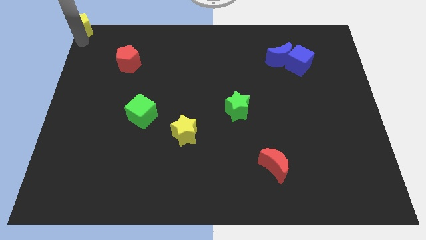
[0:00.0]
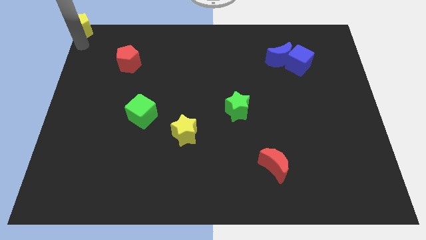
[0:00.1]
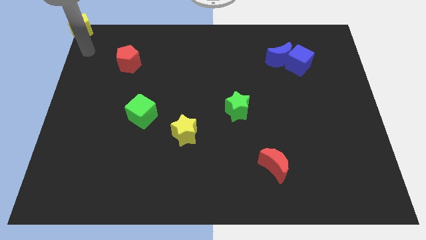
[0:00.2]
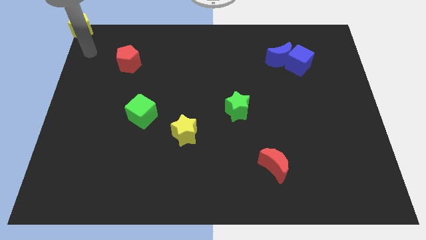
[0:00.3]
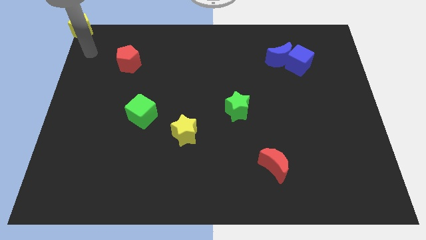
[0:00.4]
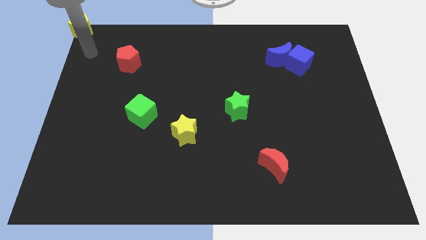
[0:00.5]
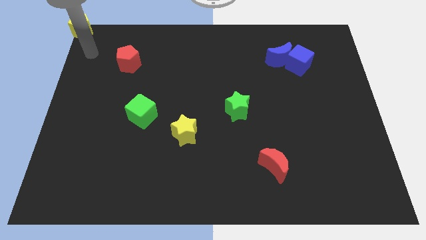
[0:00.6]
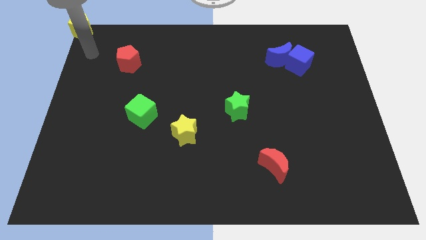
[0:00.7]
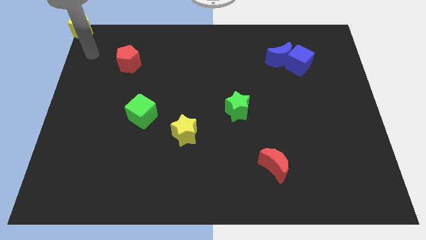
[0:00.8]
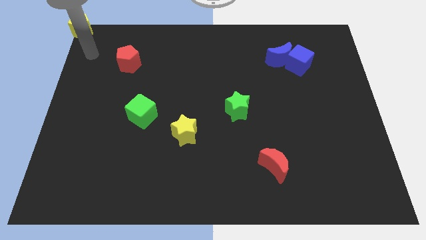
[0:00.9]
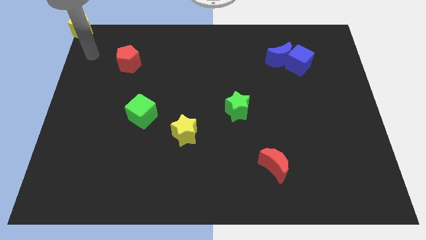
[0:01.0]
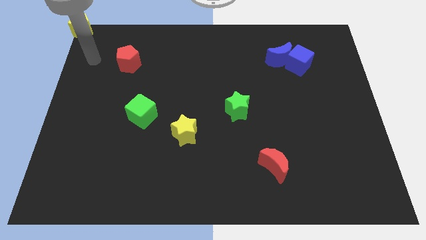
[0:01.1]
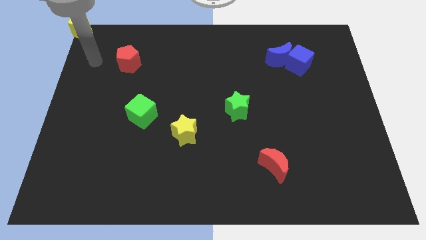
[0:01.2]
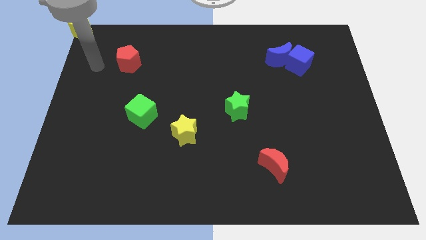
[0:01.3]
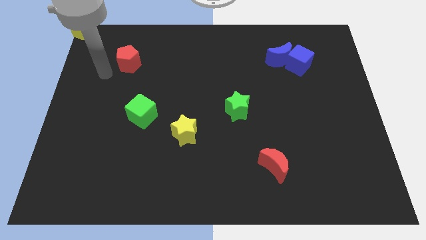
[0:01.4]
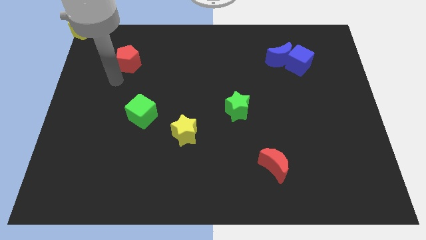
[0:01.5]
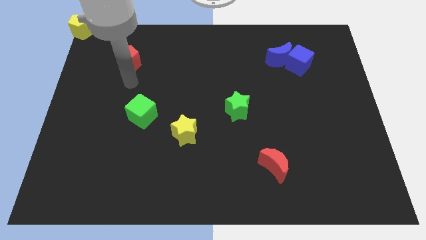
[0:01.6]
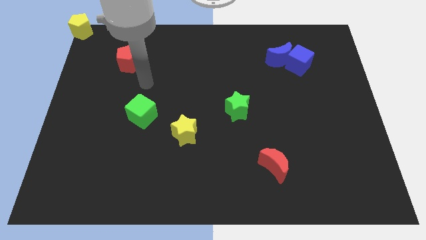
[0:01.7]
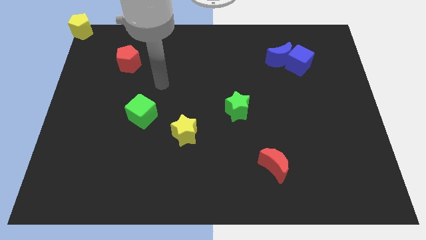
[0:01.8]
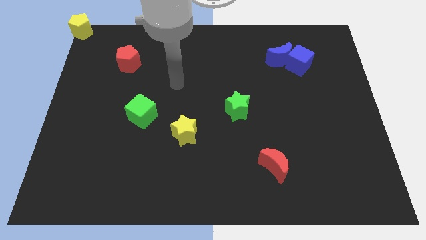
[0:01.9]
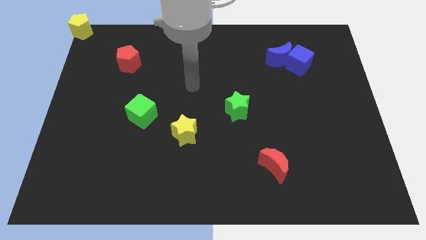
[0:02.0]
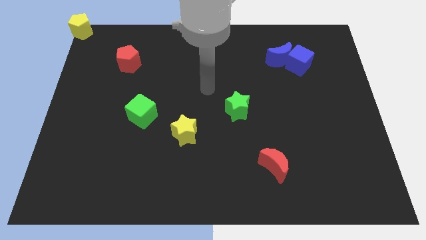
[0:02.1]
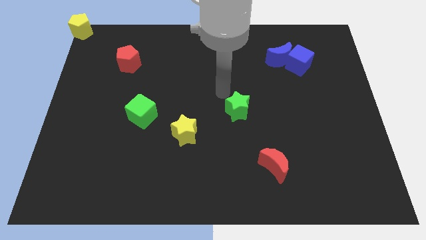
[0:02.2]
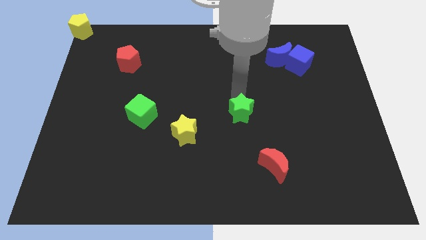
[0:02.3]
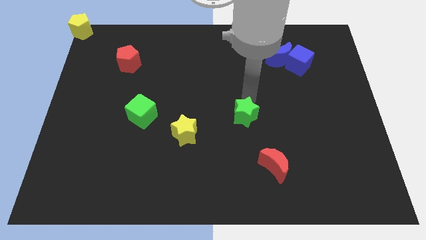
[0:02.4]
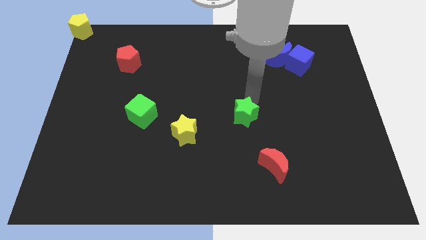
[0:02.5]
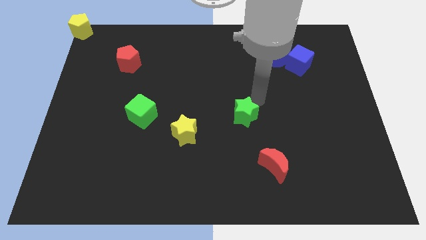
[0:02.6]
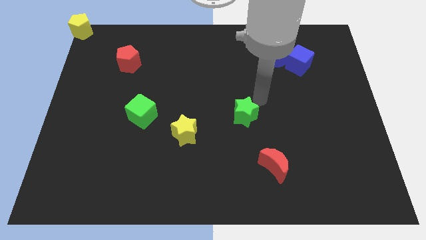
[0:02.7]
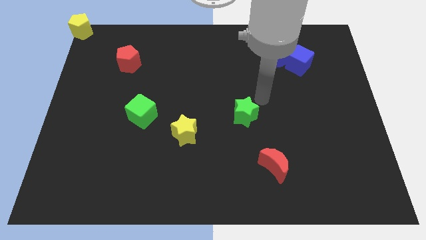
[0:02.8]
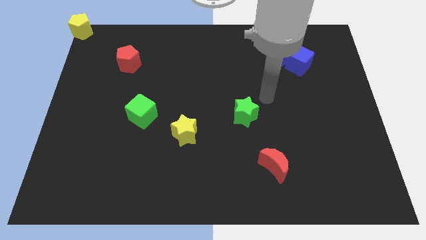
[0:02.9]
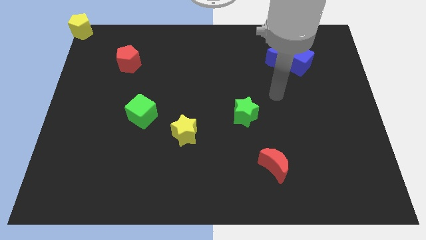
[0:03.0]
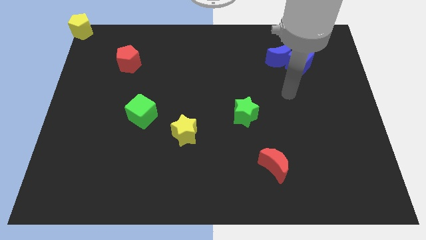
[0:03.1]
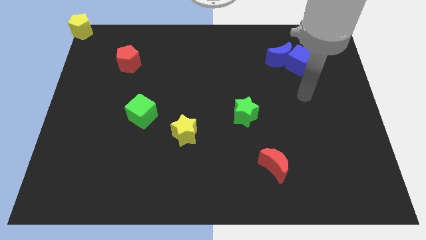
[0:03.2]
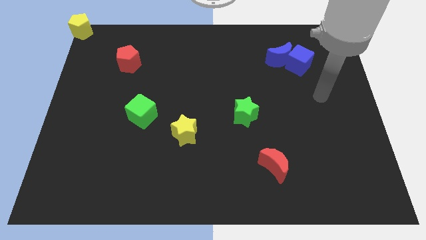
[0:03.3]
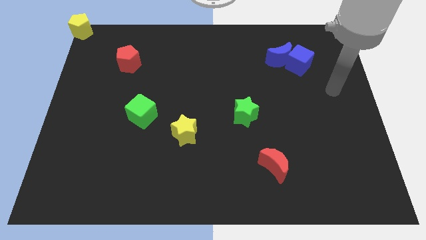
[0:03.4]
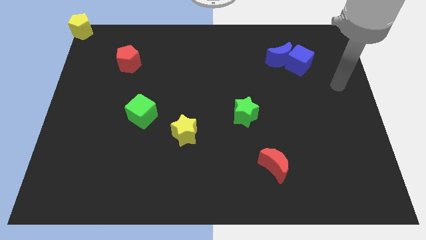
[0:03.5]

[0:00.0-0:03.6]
slightly push the green star towards the bottom side of the board

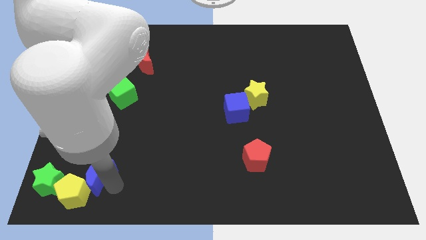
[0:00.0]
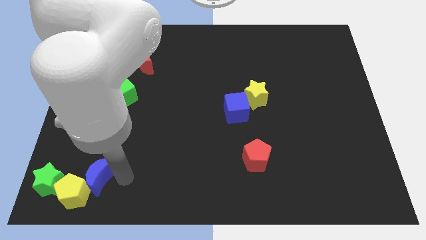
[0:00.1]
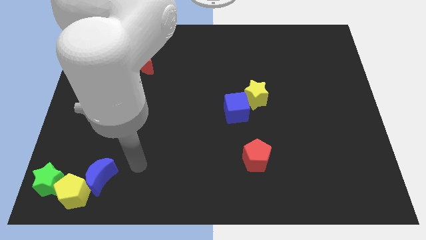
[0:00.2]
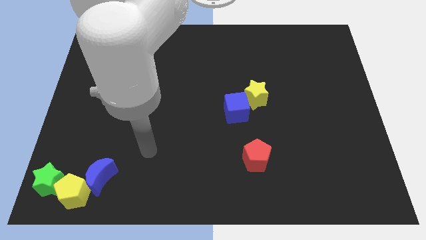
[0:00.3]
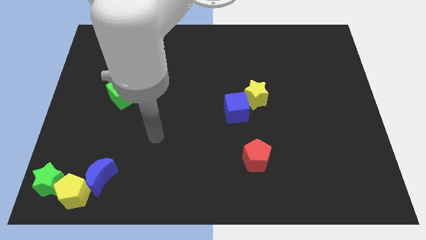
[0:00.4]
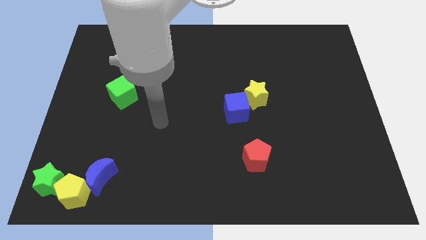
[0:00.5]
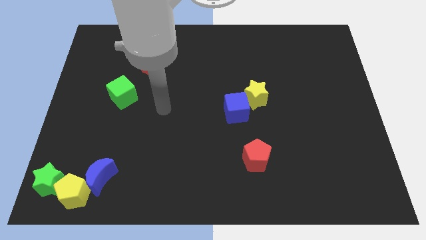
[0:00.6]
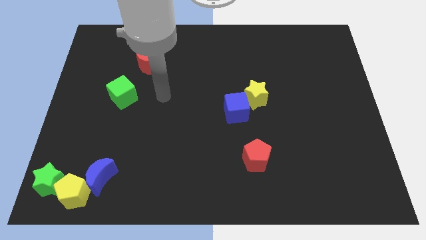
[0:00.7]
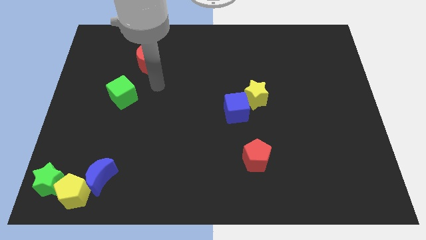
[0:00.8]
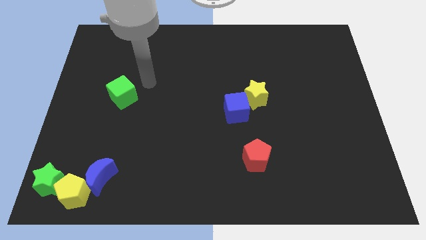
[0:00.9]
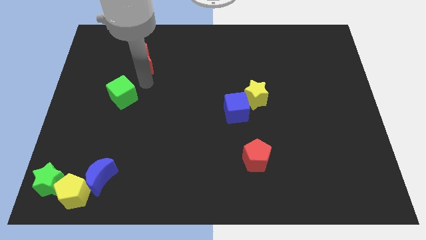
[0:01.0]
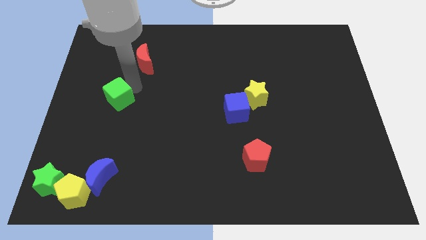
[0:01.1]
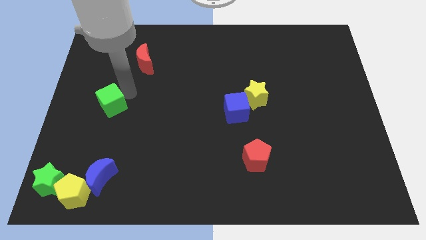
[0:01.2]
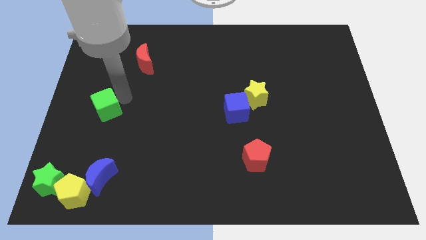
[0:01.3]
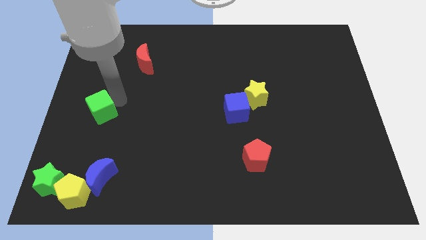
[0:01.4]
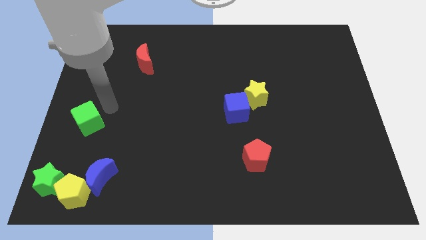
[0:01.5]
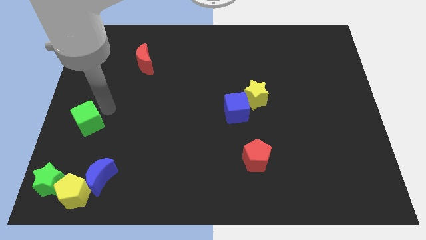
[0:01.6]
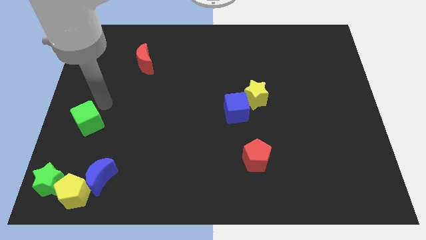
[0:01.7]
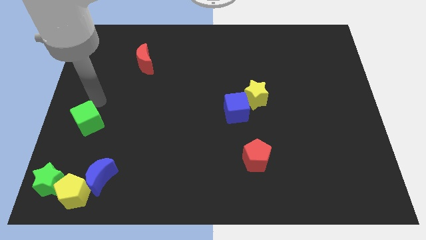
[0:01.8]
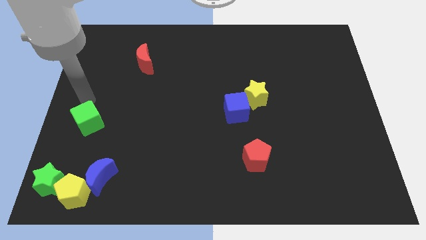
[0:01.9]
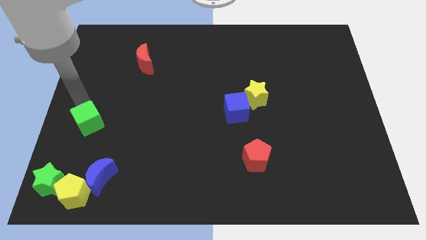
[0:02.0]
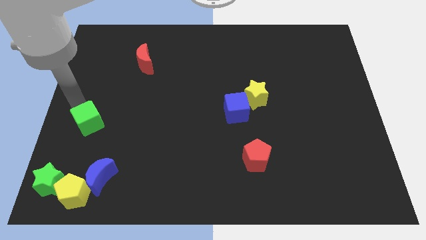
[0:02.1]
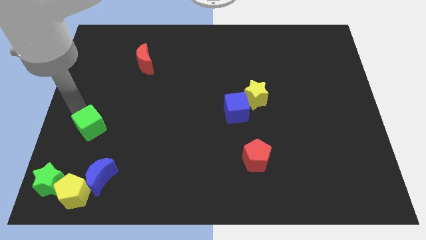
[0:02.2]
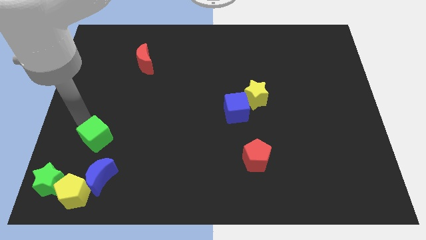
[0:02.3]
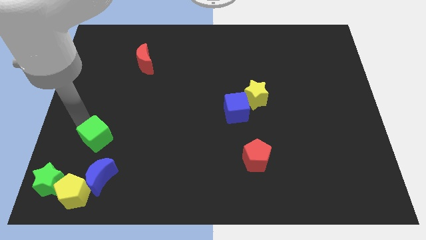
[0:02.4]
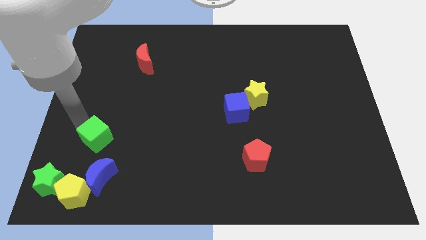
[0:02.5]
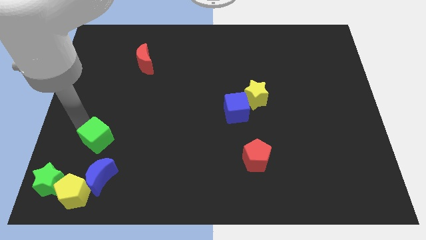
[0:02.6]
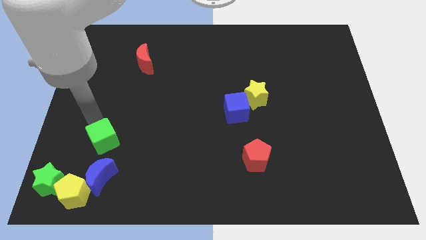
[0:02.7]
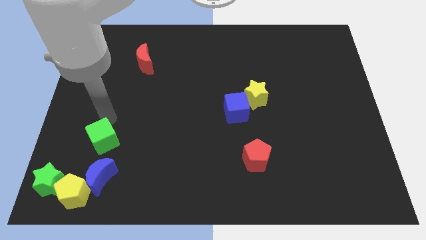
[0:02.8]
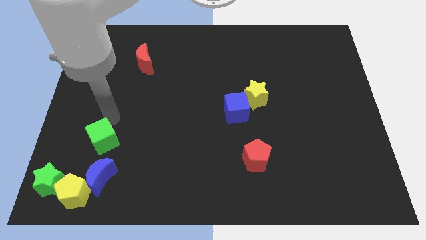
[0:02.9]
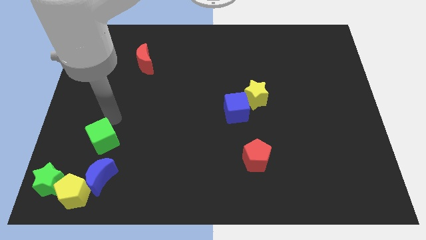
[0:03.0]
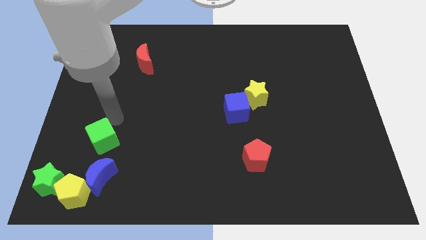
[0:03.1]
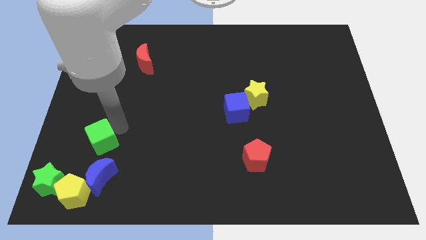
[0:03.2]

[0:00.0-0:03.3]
push the green cube to the top of the blue crescent

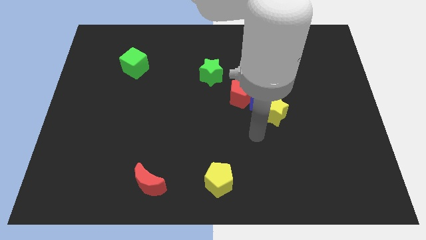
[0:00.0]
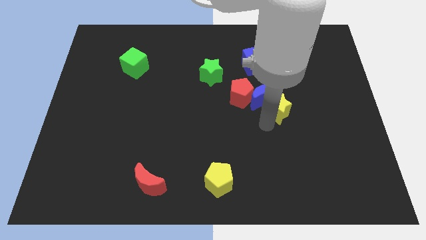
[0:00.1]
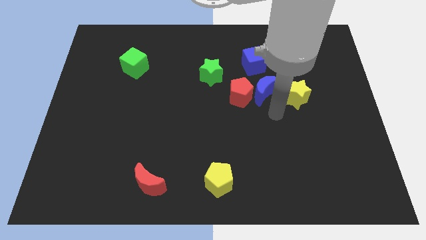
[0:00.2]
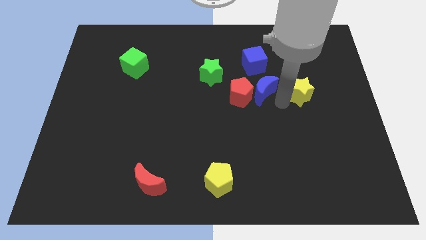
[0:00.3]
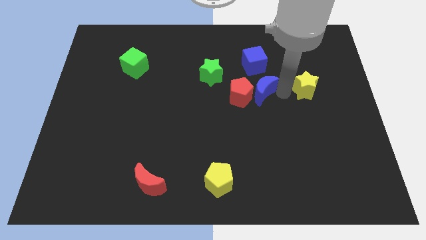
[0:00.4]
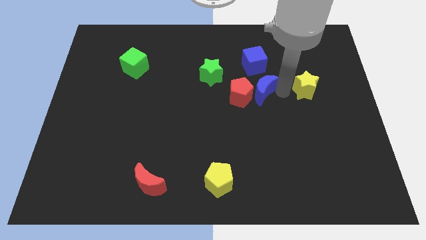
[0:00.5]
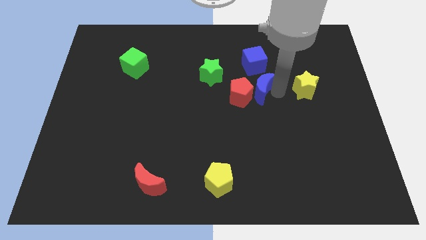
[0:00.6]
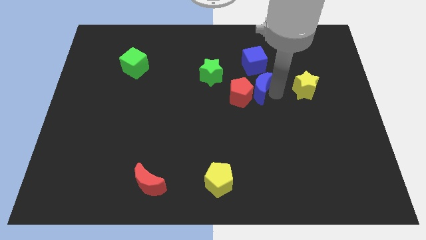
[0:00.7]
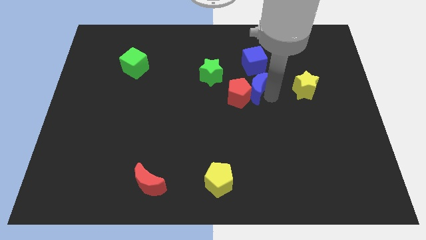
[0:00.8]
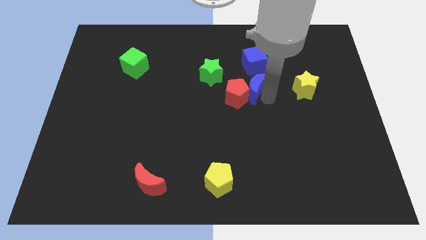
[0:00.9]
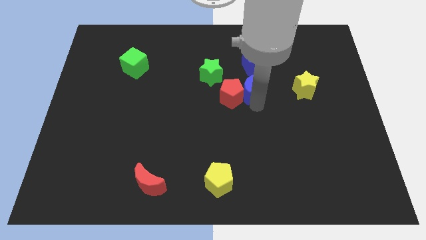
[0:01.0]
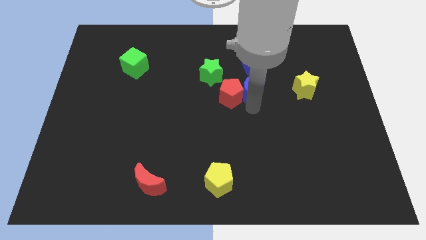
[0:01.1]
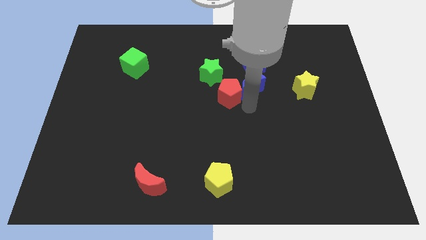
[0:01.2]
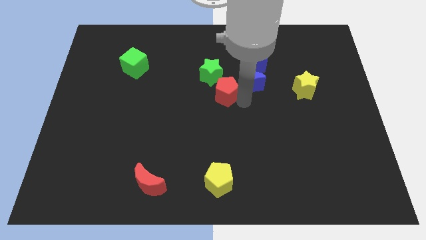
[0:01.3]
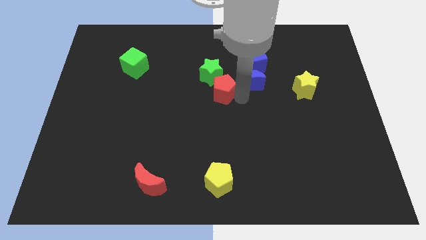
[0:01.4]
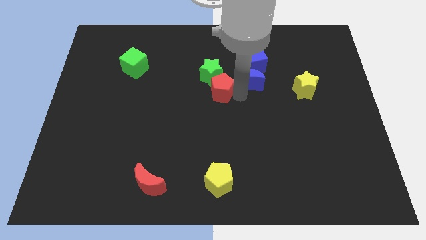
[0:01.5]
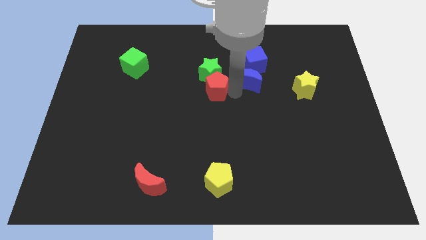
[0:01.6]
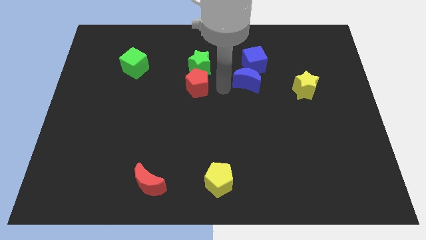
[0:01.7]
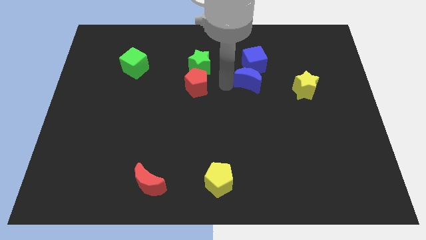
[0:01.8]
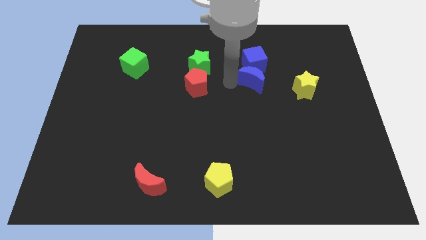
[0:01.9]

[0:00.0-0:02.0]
separate the yellow star and the blue moon

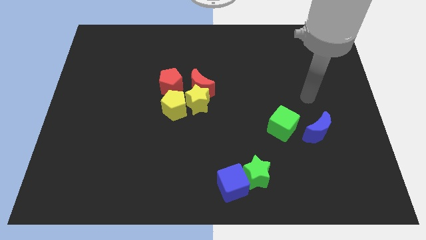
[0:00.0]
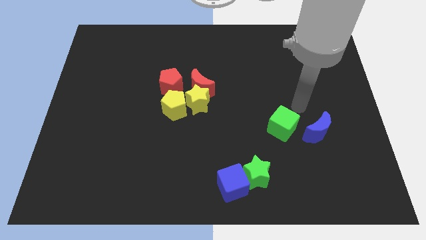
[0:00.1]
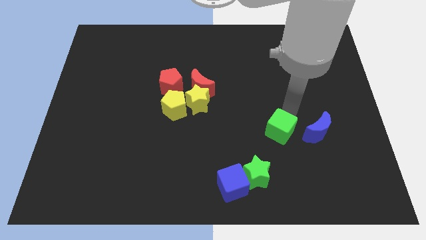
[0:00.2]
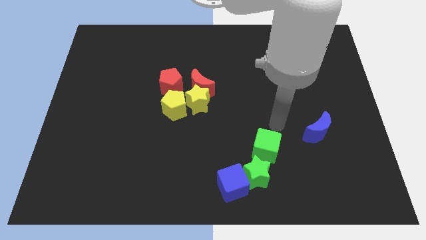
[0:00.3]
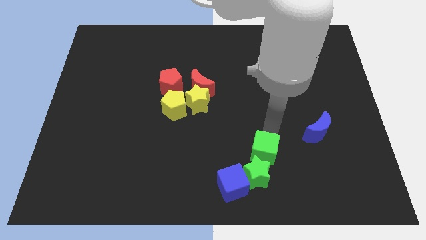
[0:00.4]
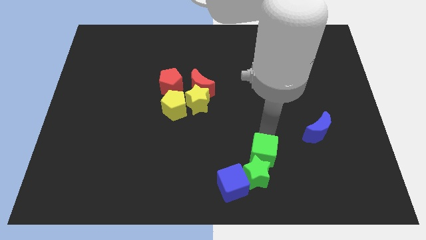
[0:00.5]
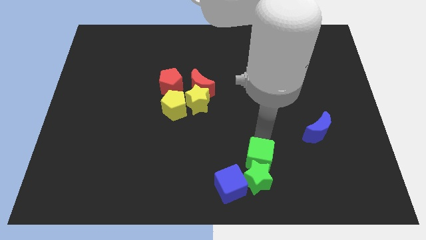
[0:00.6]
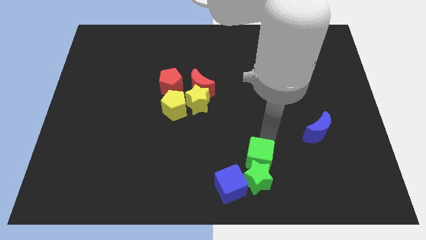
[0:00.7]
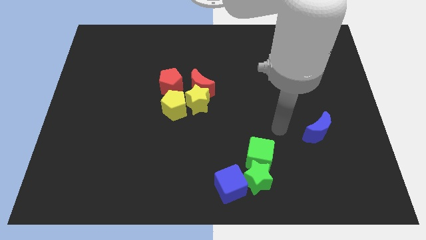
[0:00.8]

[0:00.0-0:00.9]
move the green cube to the top of the green star
